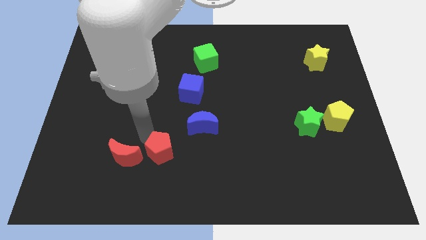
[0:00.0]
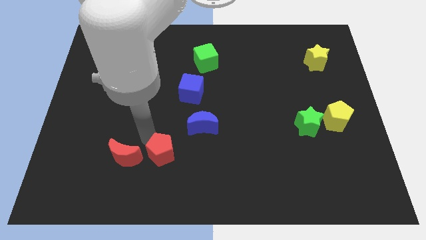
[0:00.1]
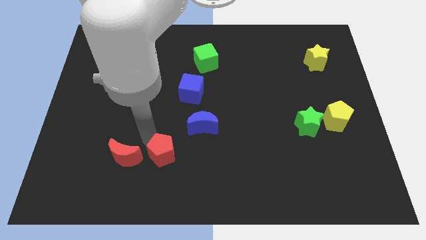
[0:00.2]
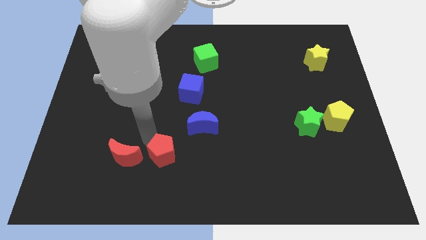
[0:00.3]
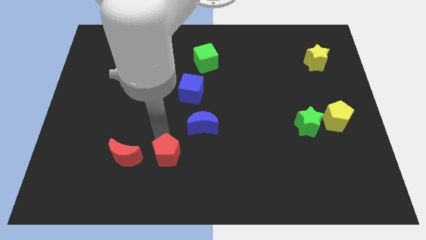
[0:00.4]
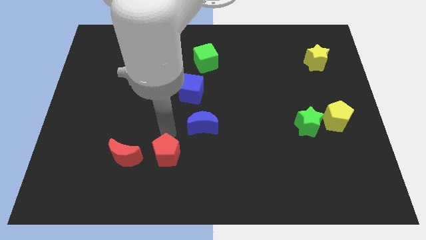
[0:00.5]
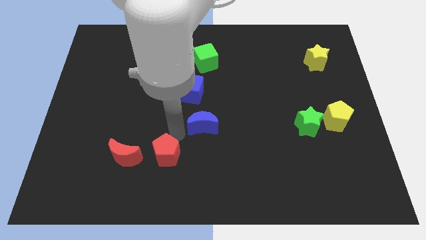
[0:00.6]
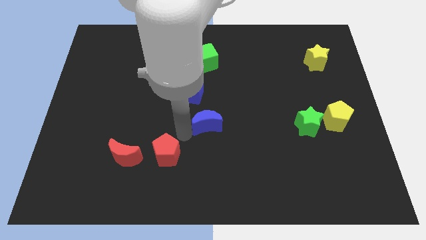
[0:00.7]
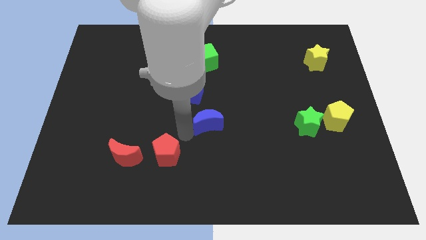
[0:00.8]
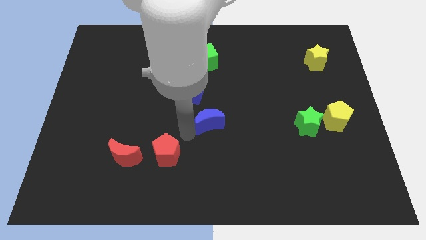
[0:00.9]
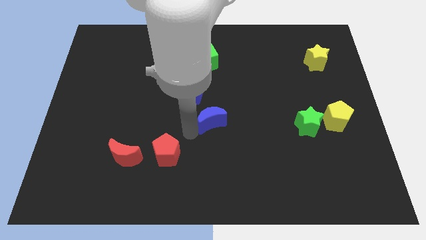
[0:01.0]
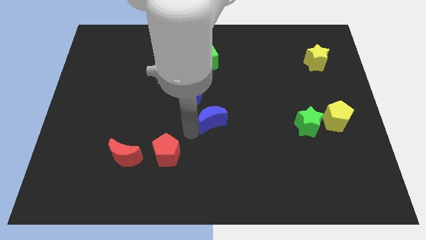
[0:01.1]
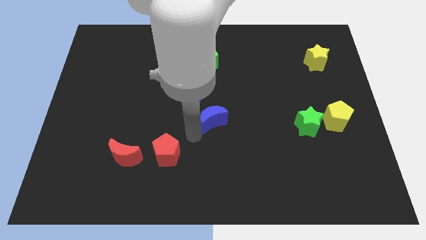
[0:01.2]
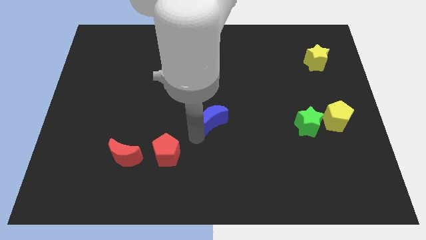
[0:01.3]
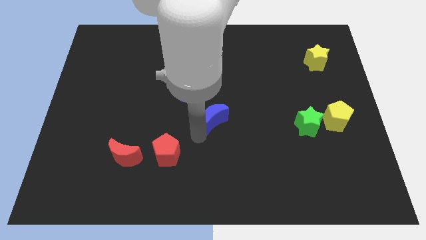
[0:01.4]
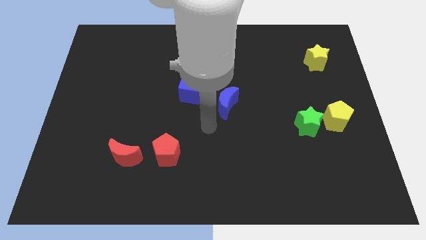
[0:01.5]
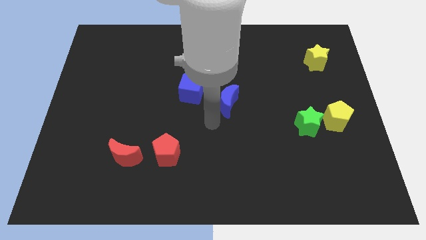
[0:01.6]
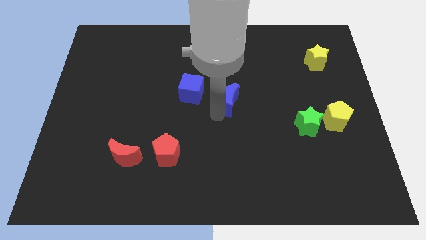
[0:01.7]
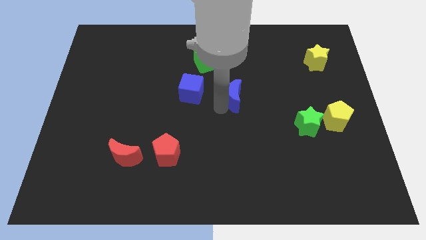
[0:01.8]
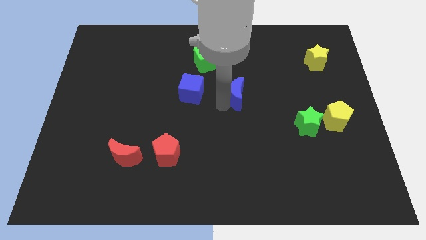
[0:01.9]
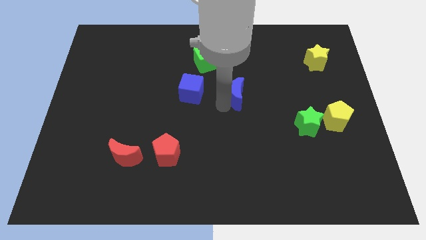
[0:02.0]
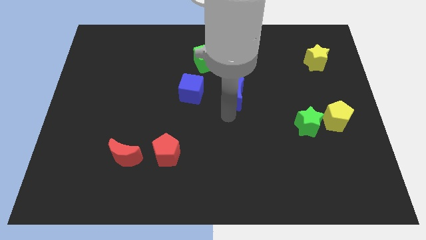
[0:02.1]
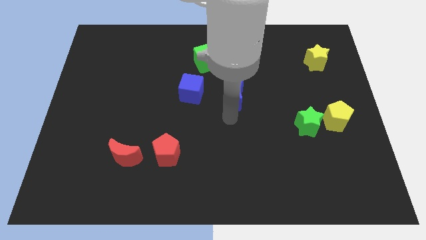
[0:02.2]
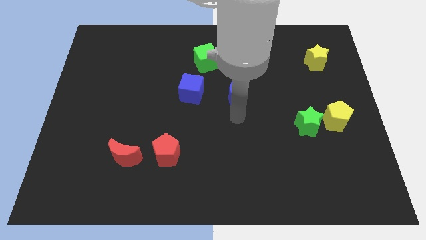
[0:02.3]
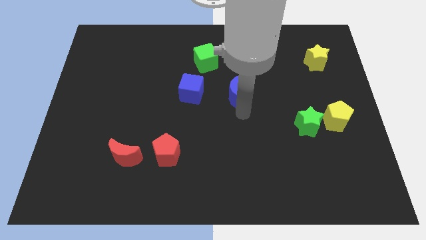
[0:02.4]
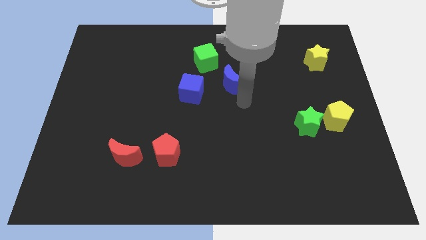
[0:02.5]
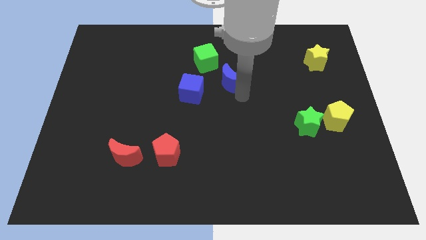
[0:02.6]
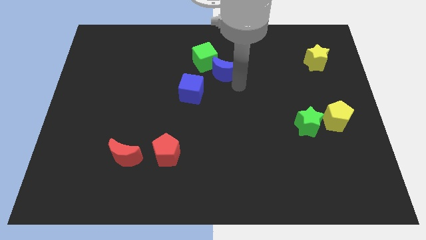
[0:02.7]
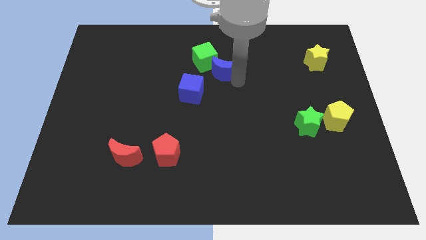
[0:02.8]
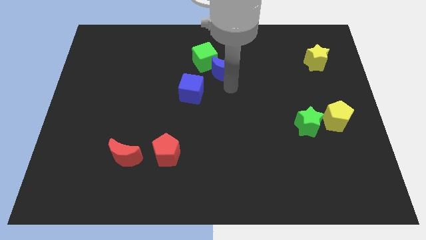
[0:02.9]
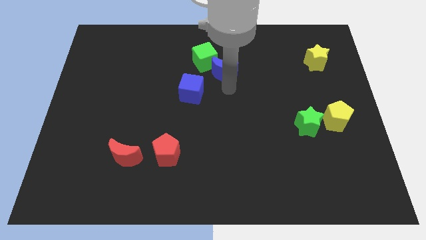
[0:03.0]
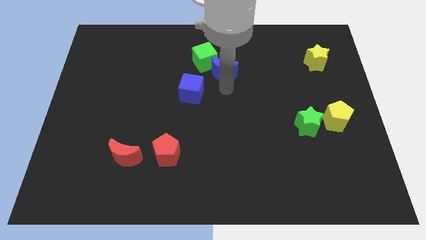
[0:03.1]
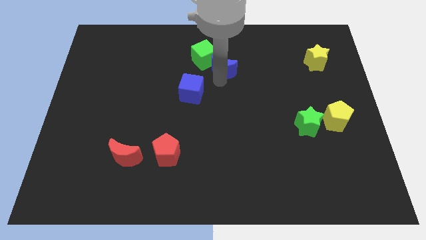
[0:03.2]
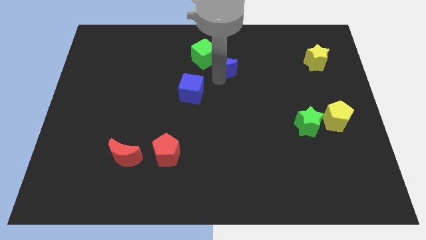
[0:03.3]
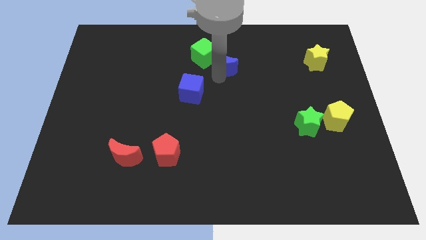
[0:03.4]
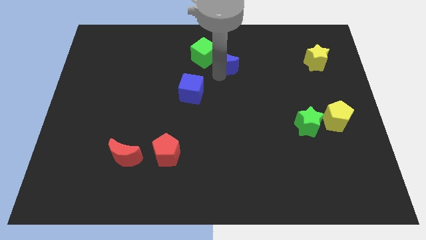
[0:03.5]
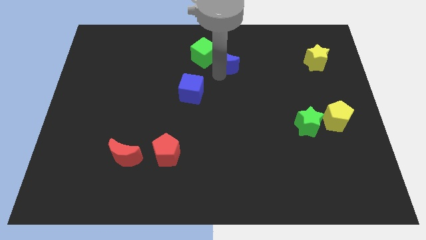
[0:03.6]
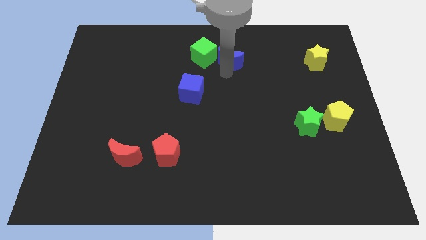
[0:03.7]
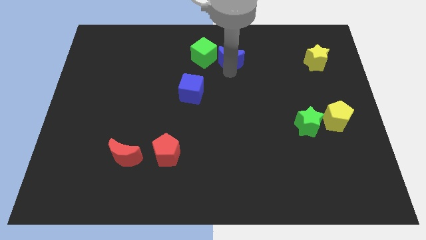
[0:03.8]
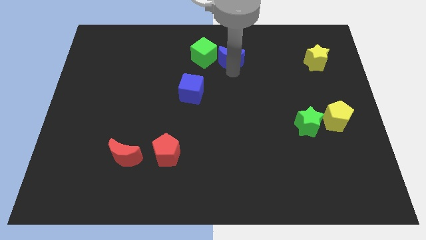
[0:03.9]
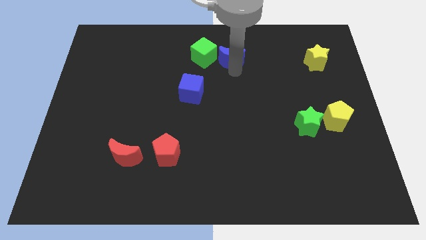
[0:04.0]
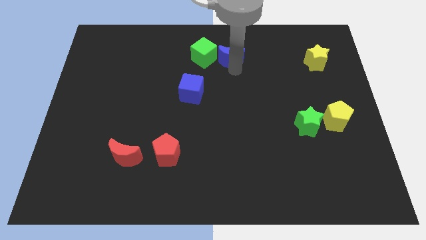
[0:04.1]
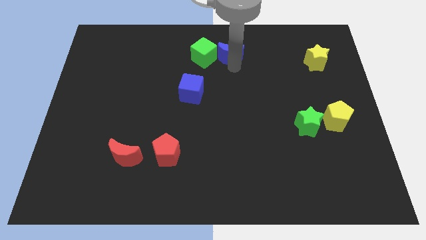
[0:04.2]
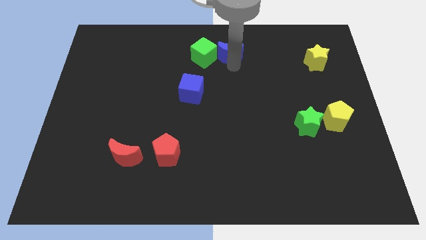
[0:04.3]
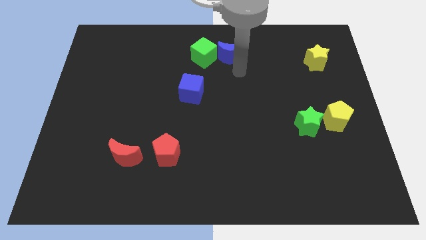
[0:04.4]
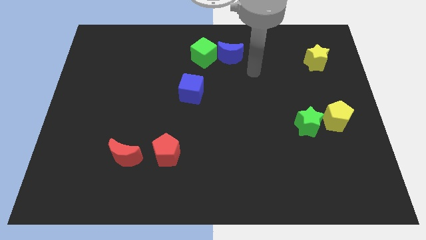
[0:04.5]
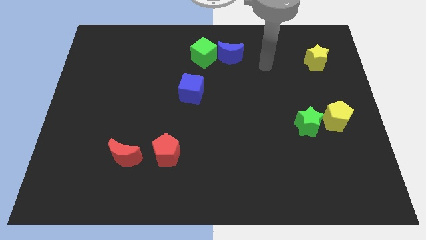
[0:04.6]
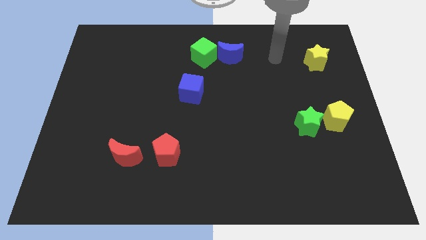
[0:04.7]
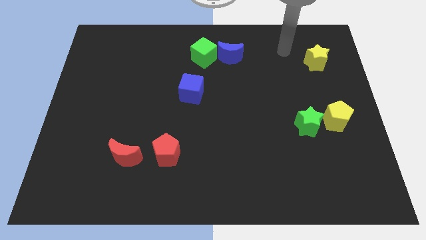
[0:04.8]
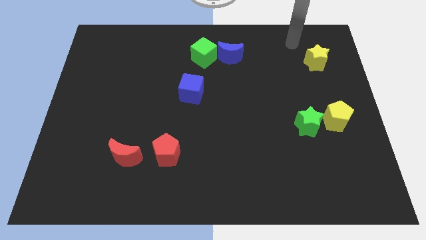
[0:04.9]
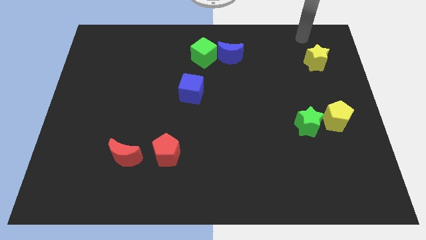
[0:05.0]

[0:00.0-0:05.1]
put the blue crescent to the left of the yellow star

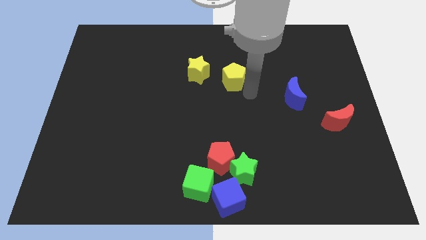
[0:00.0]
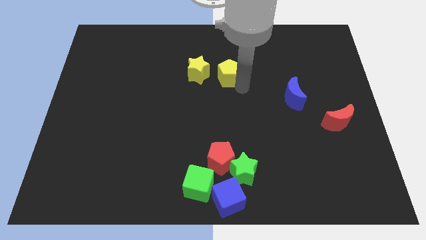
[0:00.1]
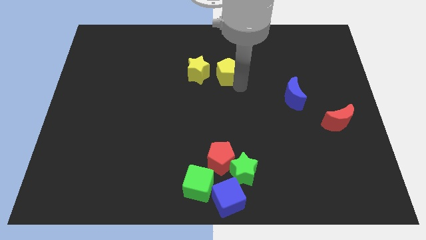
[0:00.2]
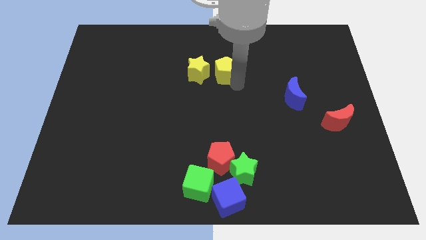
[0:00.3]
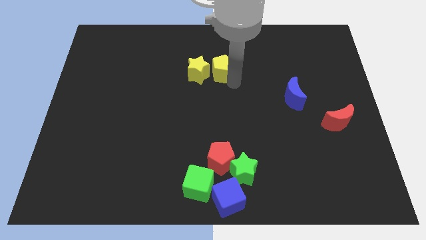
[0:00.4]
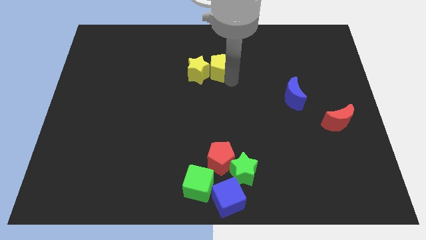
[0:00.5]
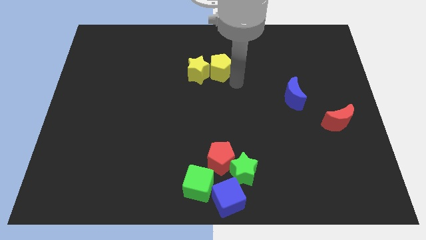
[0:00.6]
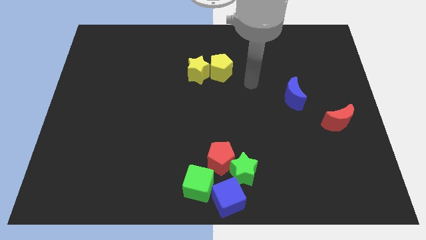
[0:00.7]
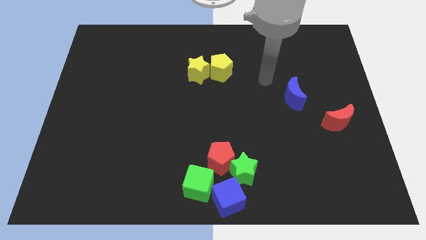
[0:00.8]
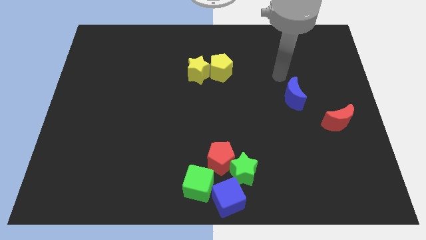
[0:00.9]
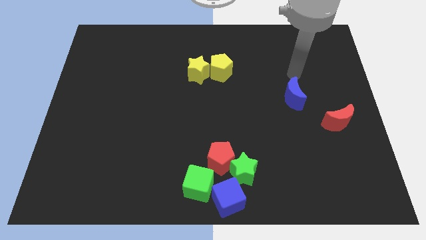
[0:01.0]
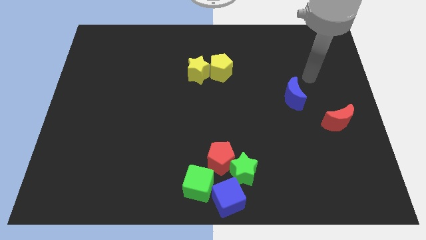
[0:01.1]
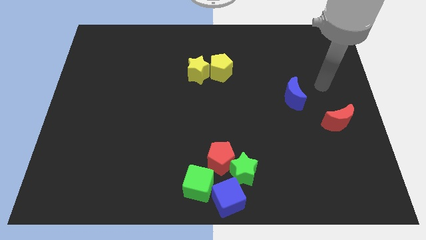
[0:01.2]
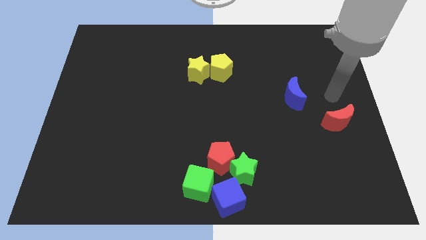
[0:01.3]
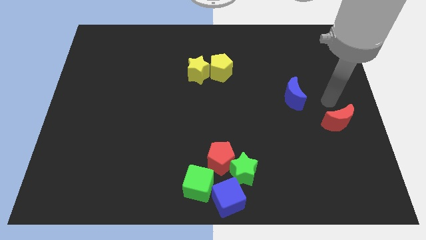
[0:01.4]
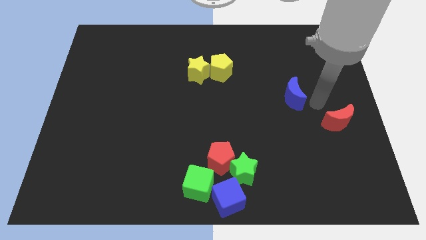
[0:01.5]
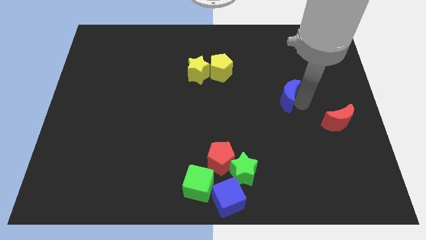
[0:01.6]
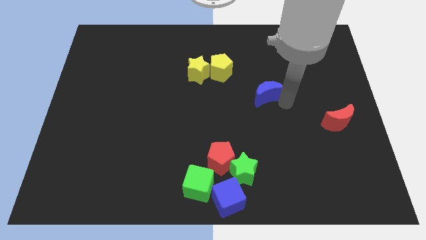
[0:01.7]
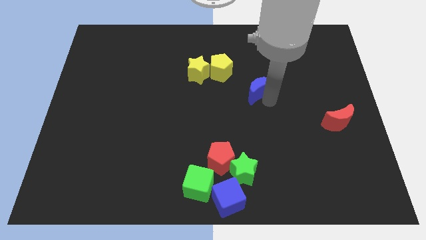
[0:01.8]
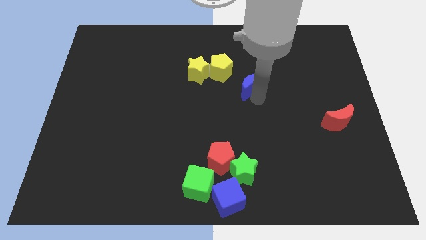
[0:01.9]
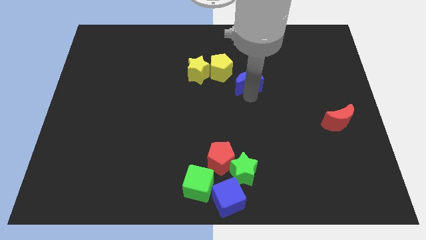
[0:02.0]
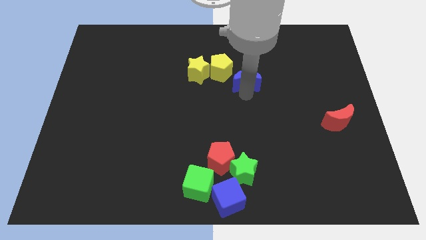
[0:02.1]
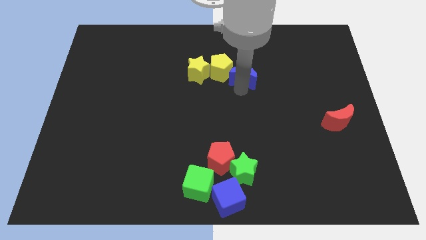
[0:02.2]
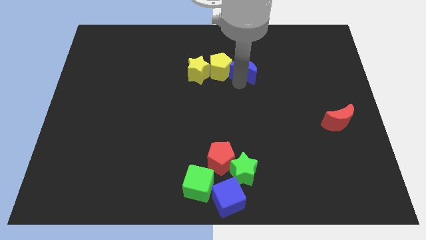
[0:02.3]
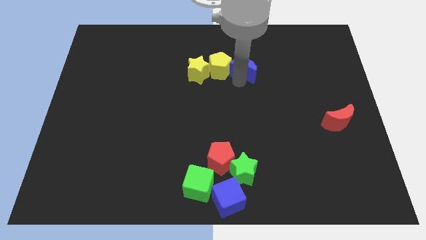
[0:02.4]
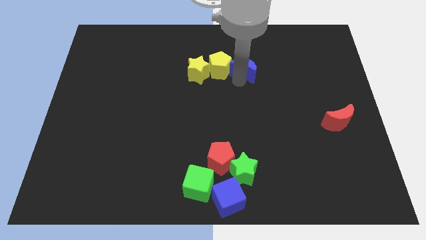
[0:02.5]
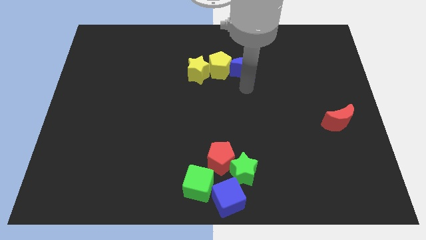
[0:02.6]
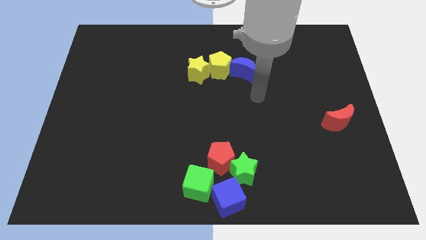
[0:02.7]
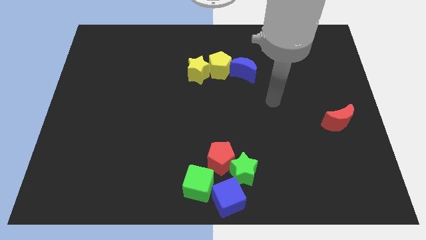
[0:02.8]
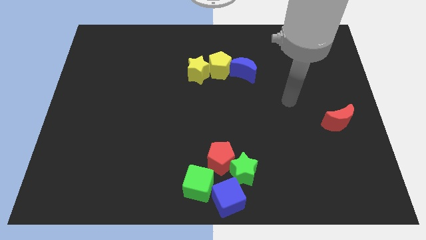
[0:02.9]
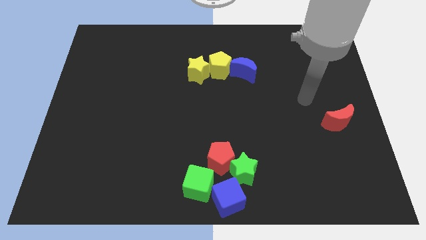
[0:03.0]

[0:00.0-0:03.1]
push the blue moon to the bottom right side of the yellow pentagon

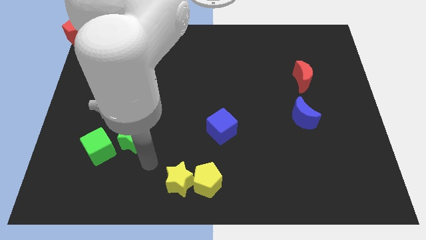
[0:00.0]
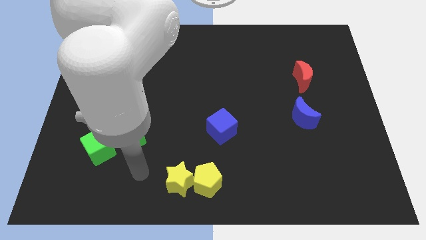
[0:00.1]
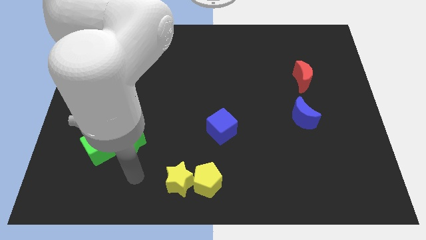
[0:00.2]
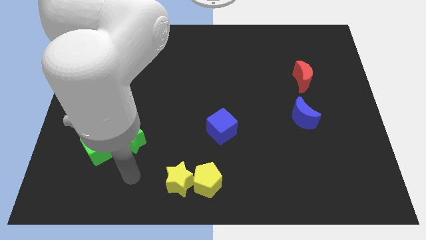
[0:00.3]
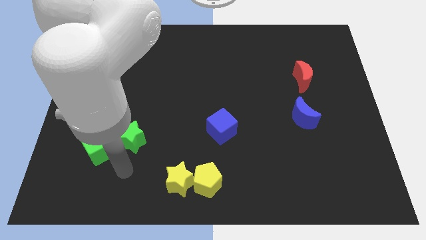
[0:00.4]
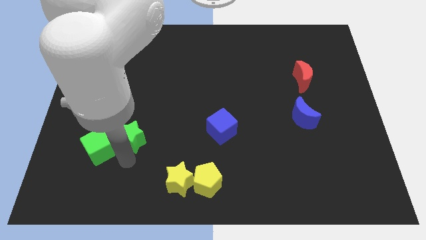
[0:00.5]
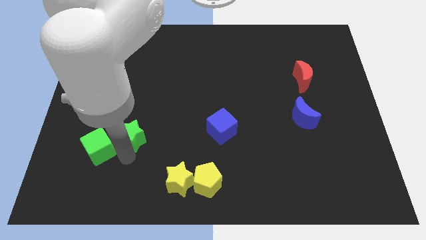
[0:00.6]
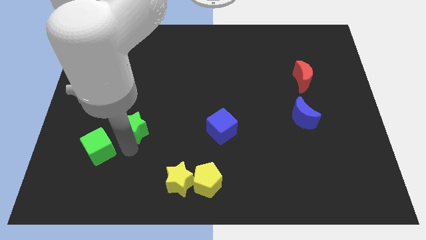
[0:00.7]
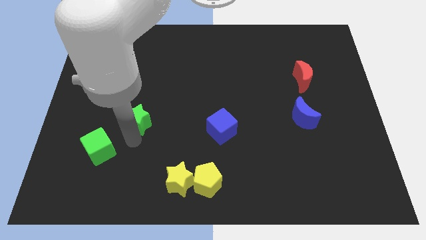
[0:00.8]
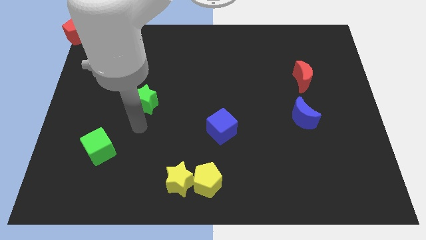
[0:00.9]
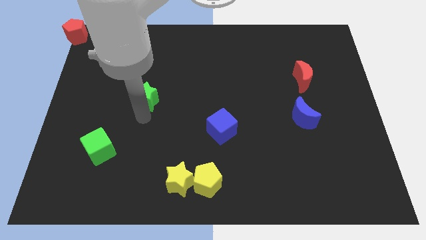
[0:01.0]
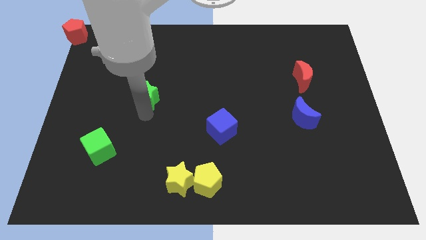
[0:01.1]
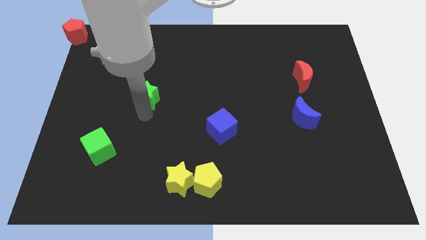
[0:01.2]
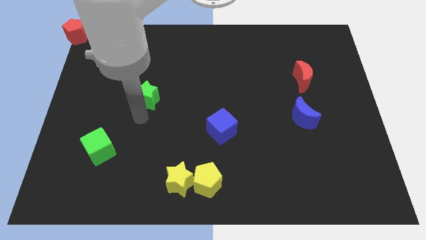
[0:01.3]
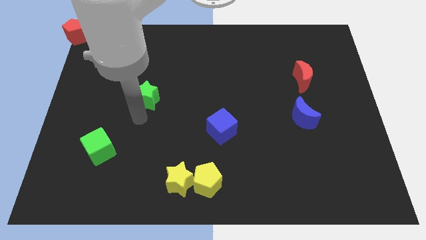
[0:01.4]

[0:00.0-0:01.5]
slide the green star between red pentagon and blue cube
